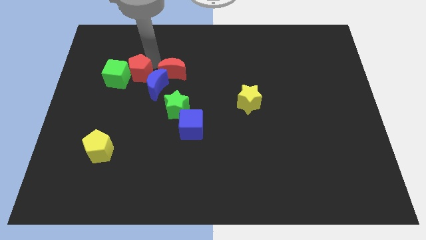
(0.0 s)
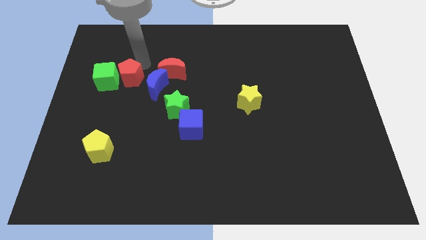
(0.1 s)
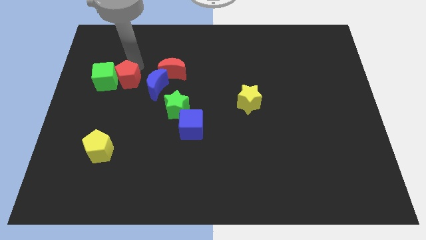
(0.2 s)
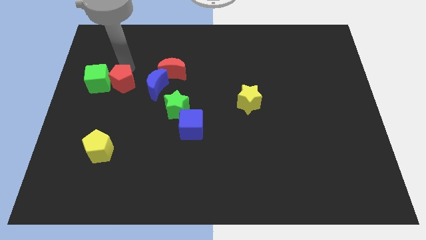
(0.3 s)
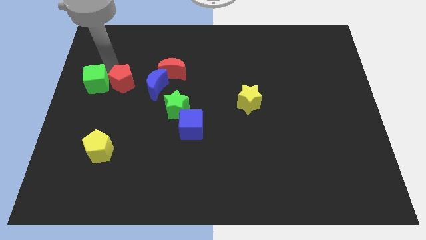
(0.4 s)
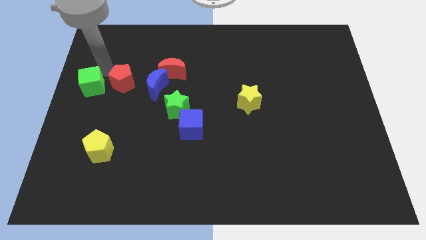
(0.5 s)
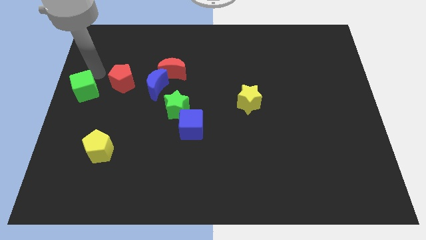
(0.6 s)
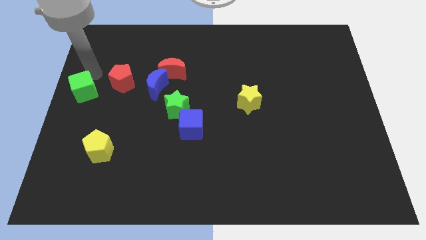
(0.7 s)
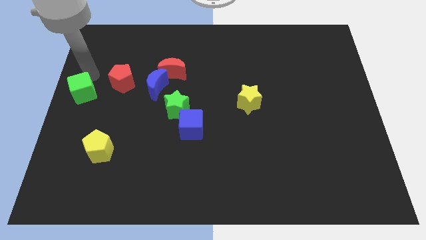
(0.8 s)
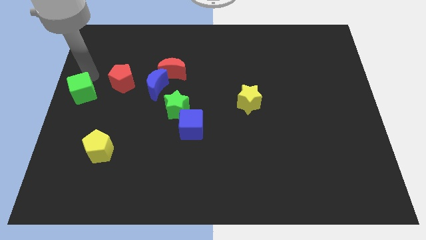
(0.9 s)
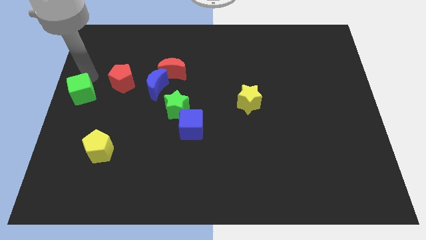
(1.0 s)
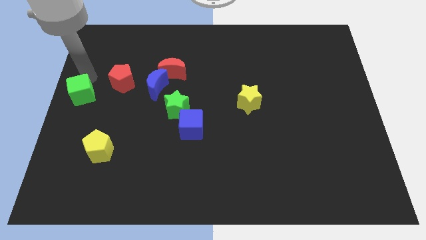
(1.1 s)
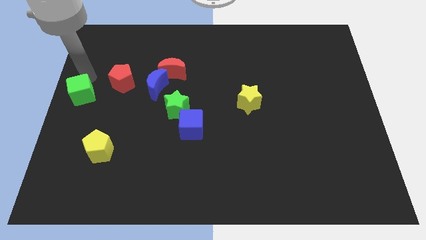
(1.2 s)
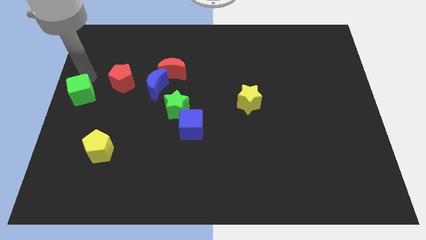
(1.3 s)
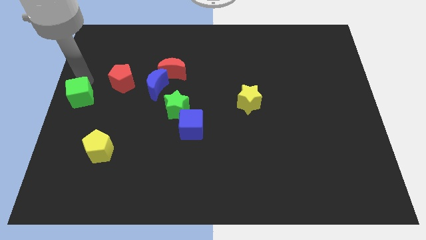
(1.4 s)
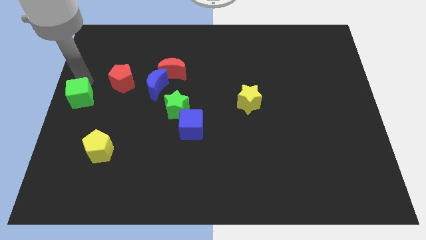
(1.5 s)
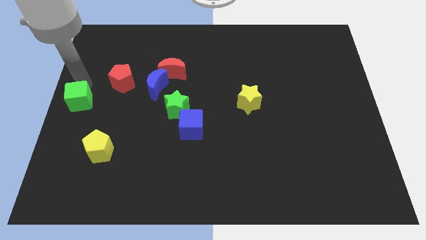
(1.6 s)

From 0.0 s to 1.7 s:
separate the green cube and red pentagon

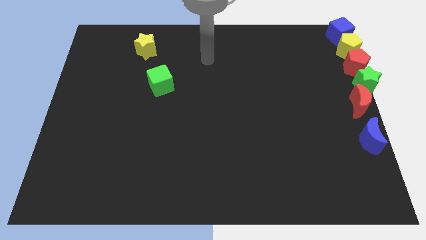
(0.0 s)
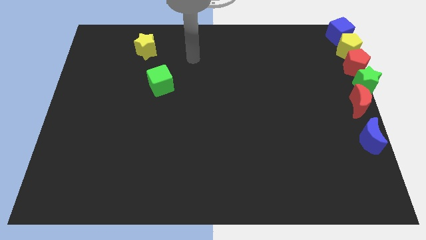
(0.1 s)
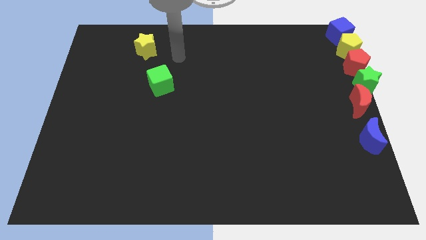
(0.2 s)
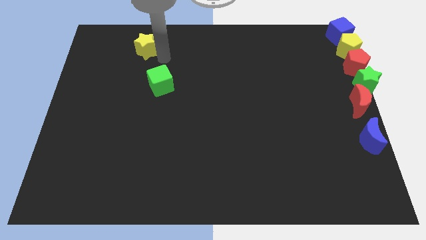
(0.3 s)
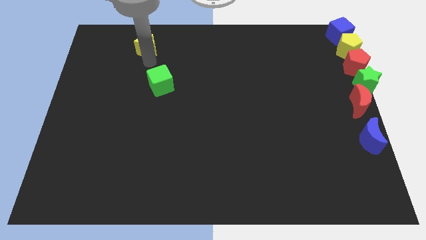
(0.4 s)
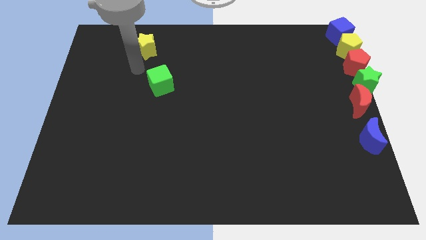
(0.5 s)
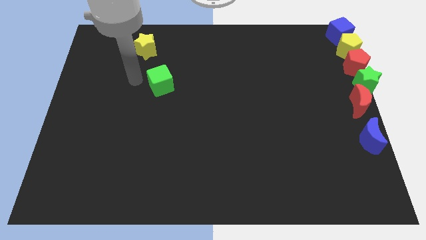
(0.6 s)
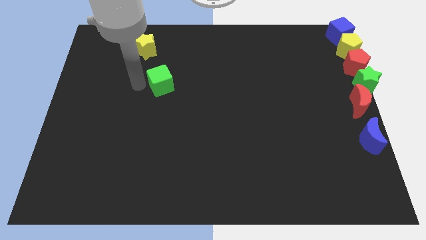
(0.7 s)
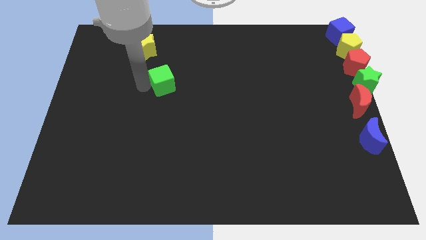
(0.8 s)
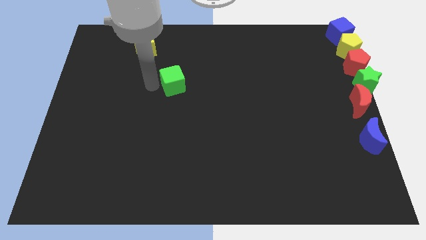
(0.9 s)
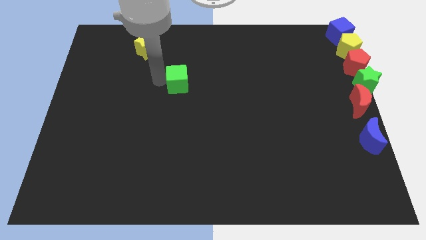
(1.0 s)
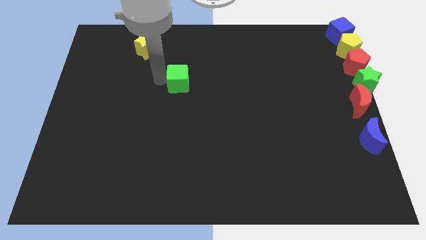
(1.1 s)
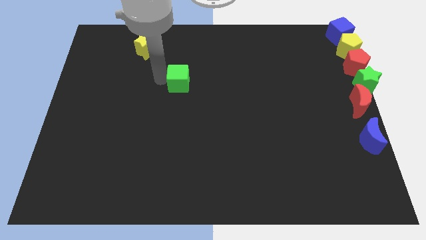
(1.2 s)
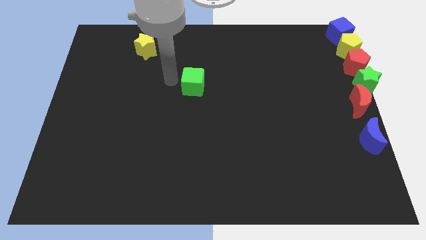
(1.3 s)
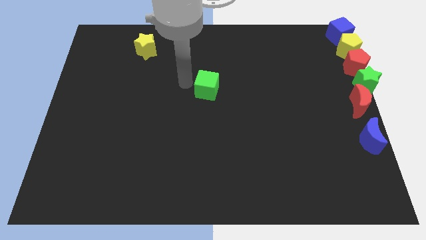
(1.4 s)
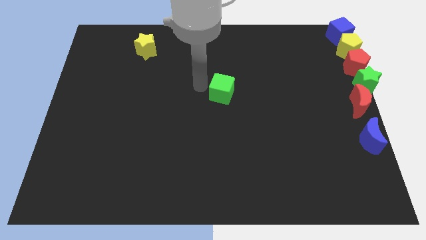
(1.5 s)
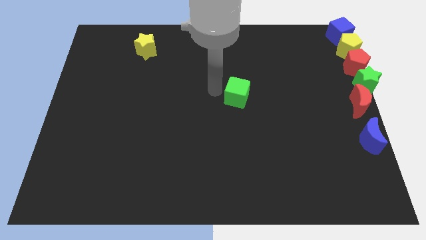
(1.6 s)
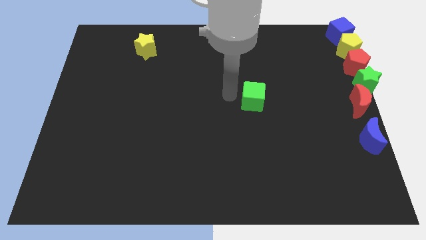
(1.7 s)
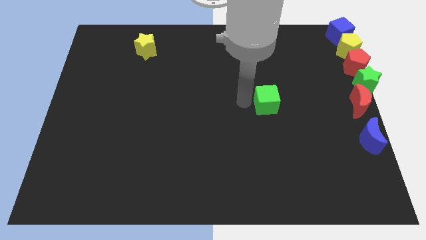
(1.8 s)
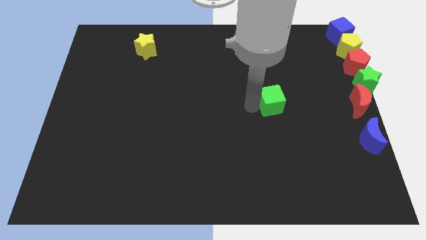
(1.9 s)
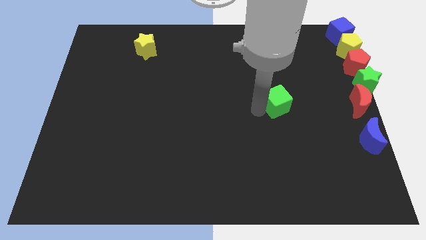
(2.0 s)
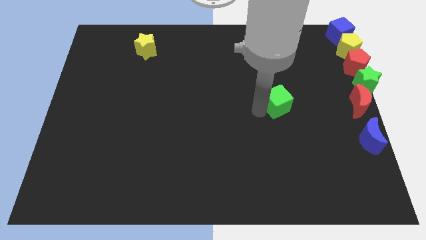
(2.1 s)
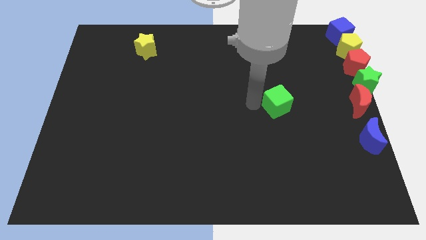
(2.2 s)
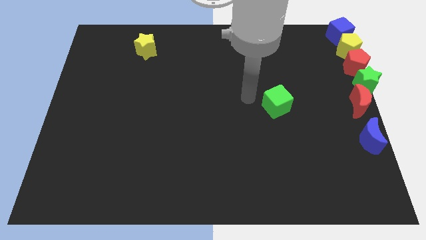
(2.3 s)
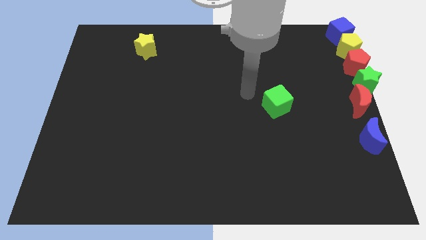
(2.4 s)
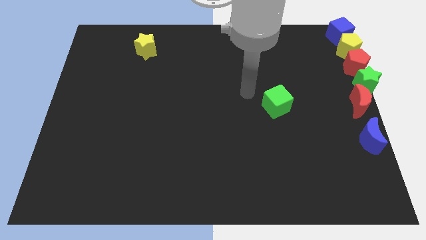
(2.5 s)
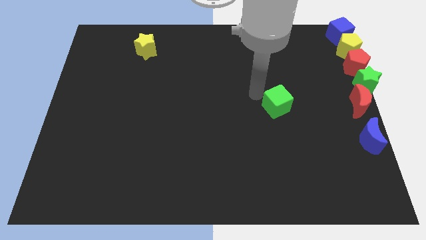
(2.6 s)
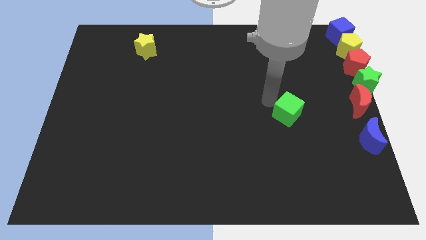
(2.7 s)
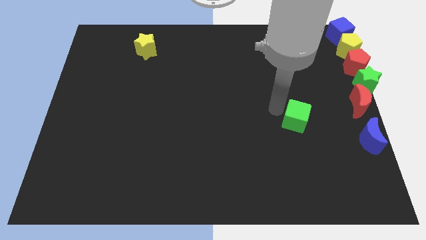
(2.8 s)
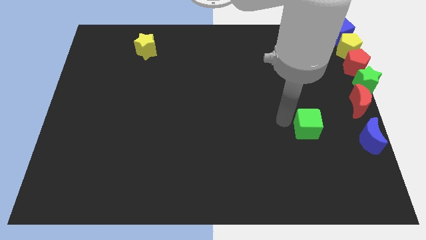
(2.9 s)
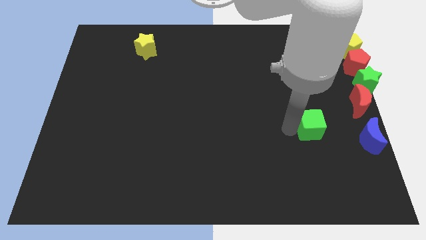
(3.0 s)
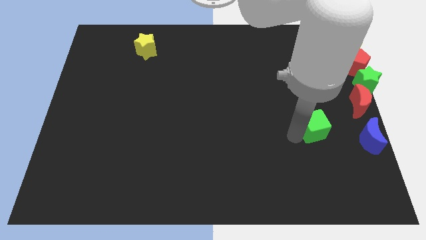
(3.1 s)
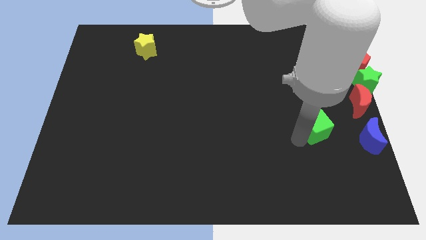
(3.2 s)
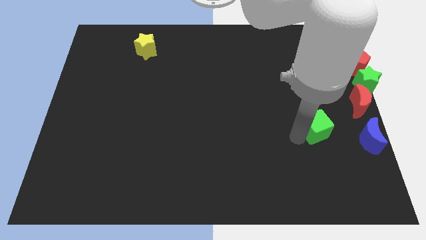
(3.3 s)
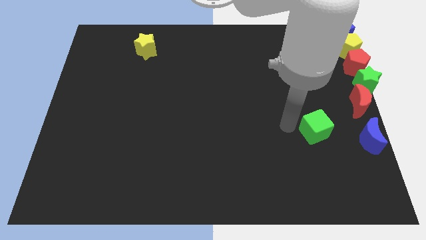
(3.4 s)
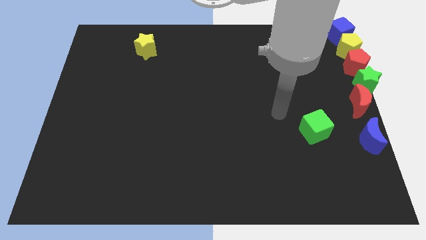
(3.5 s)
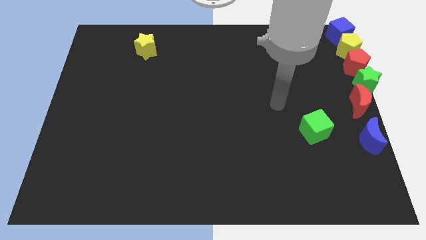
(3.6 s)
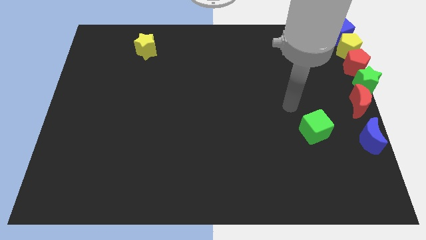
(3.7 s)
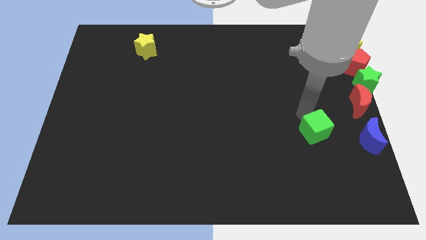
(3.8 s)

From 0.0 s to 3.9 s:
push the green cube towards the left of the blue crescent

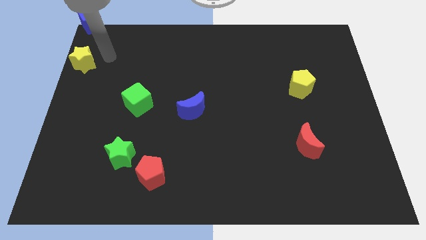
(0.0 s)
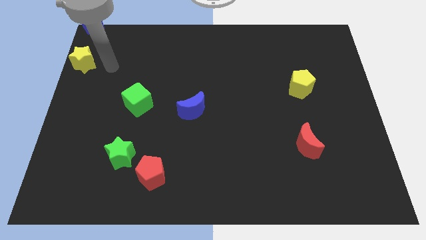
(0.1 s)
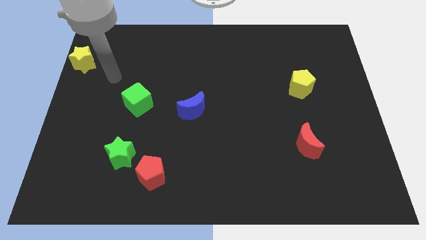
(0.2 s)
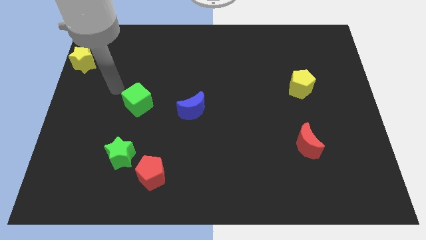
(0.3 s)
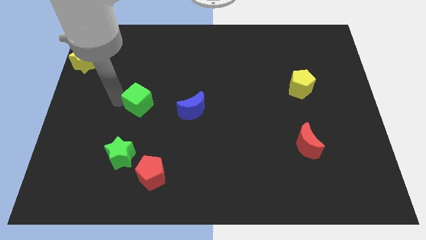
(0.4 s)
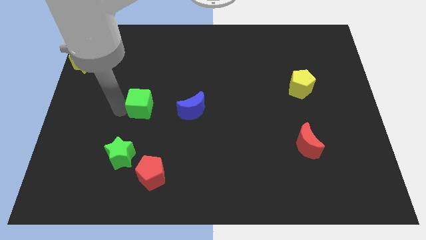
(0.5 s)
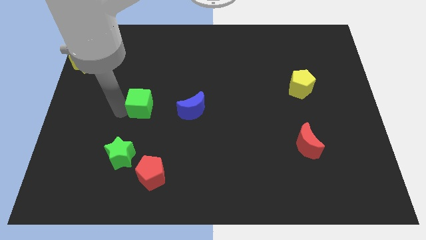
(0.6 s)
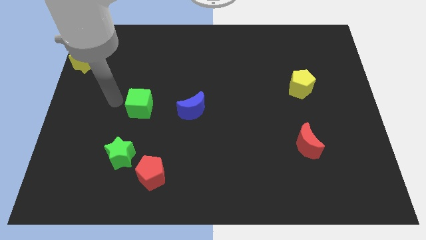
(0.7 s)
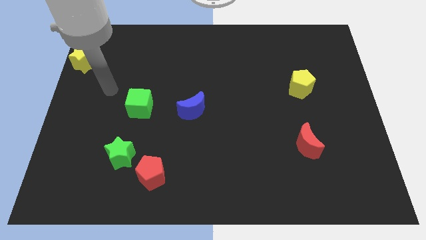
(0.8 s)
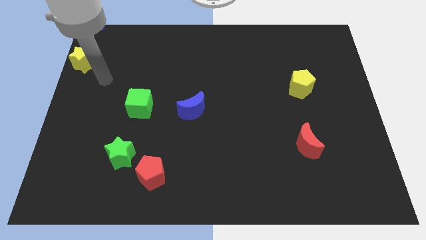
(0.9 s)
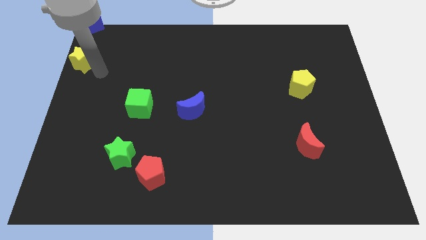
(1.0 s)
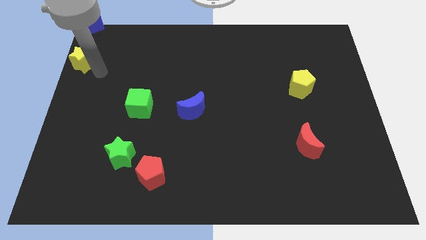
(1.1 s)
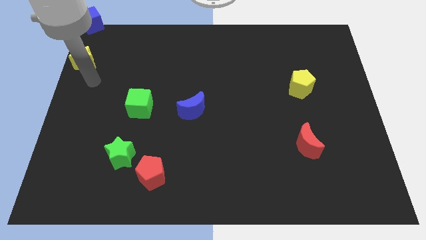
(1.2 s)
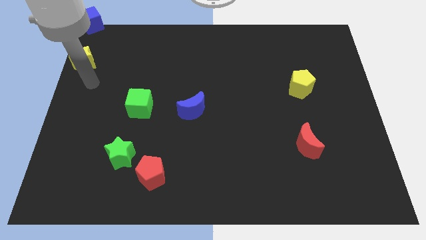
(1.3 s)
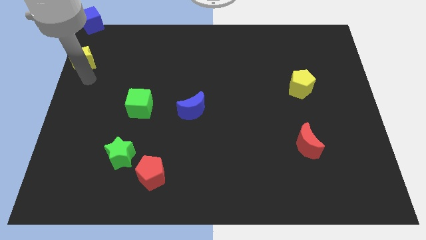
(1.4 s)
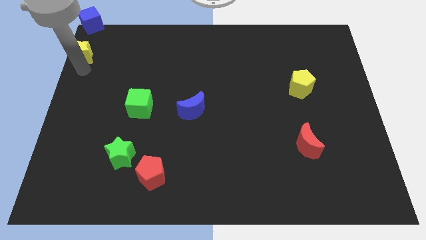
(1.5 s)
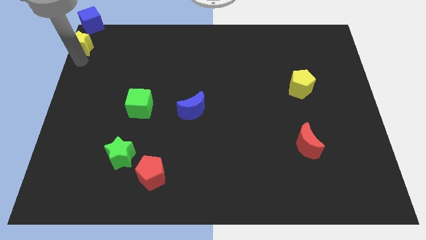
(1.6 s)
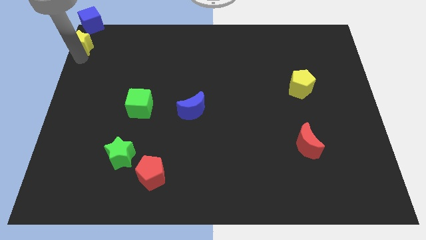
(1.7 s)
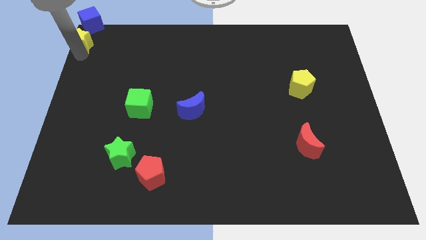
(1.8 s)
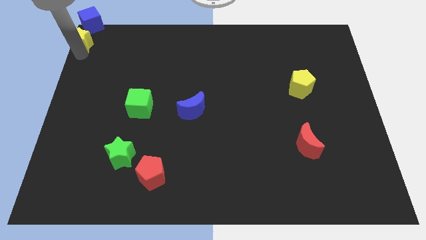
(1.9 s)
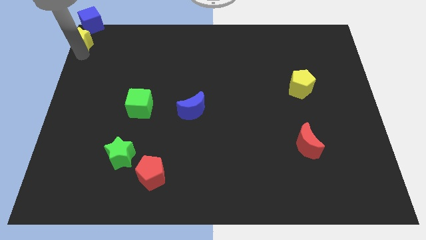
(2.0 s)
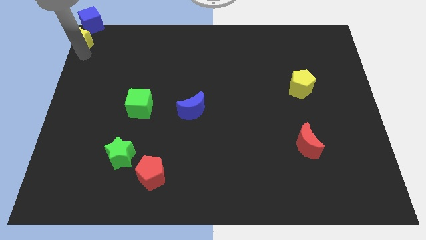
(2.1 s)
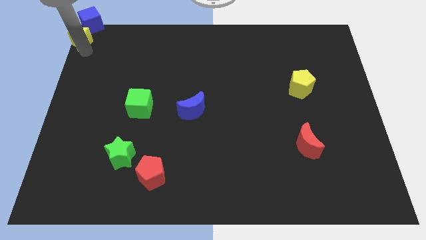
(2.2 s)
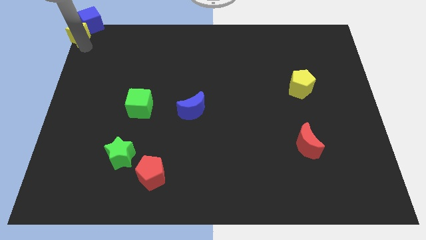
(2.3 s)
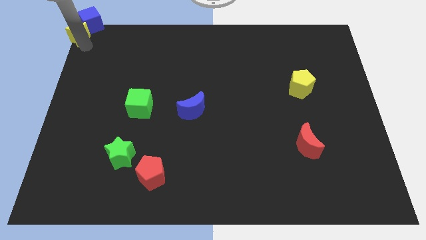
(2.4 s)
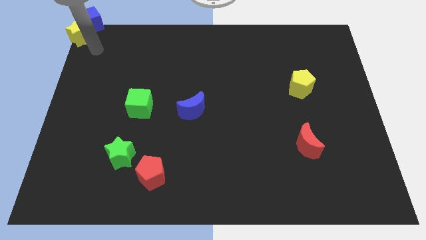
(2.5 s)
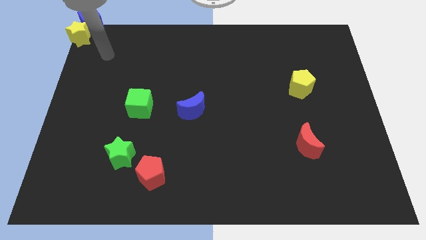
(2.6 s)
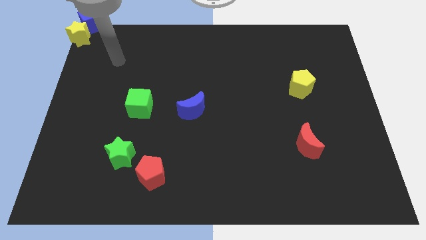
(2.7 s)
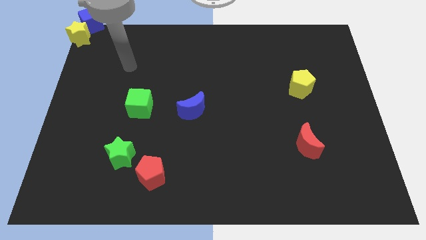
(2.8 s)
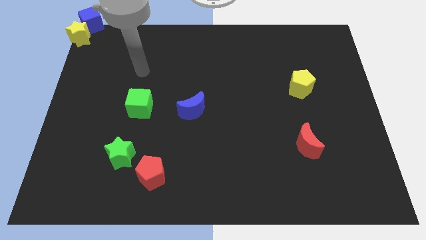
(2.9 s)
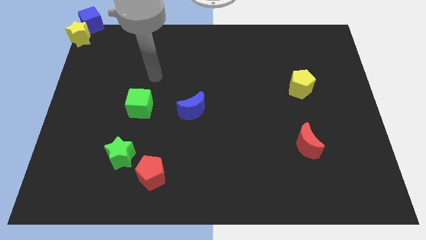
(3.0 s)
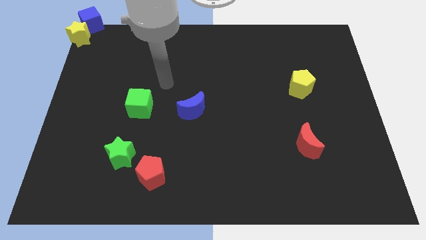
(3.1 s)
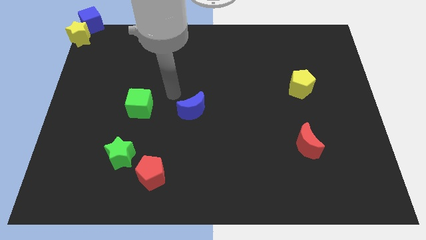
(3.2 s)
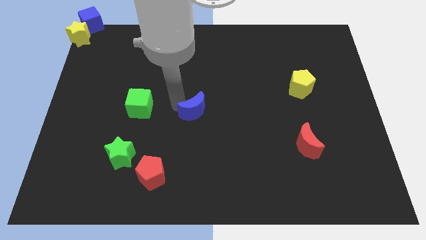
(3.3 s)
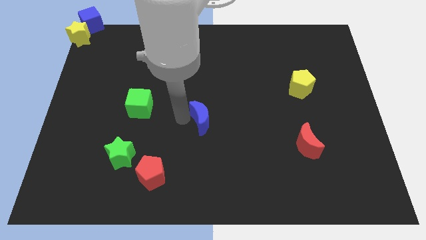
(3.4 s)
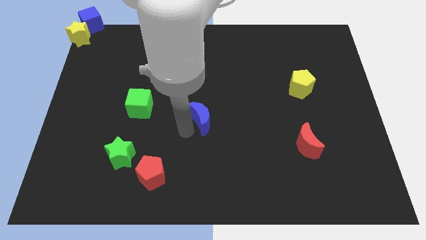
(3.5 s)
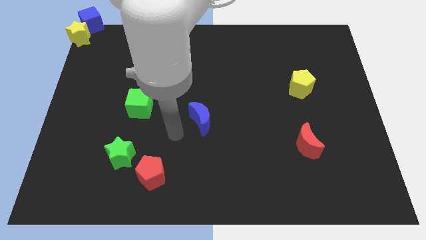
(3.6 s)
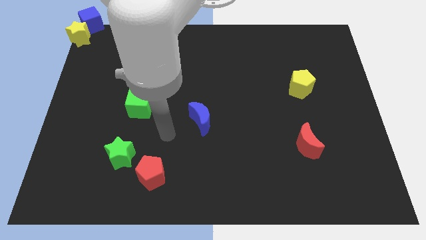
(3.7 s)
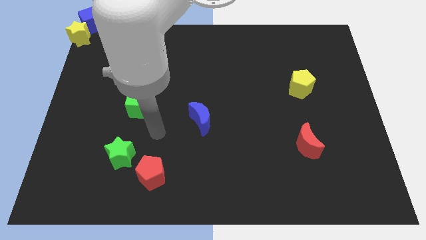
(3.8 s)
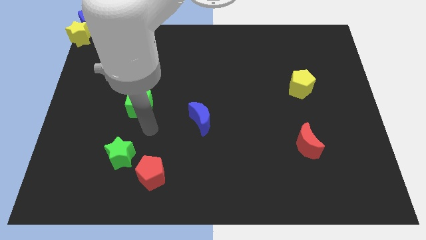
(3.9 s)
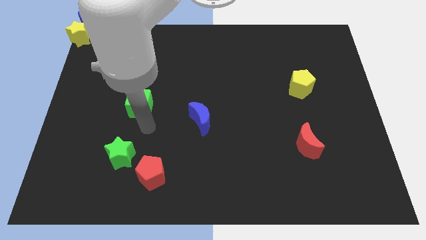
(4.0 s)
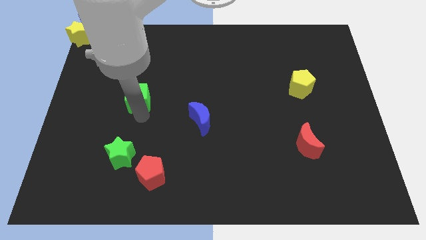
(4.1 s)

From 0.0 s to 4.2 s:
slightly push the yellow star towards the blue cube
